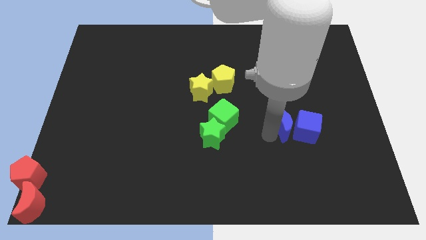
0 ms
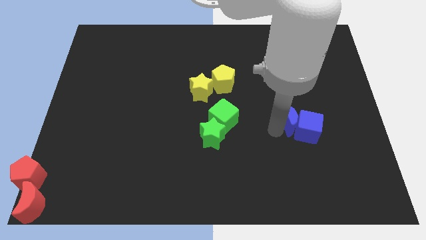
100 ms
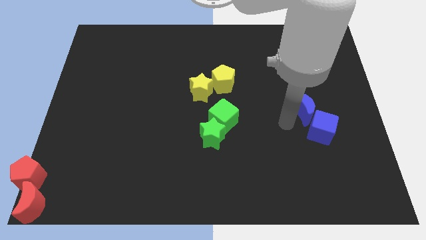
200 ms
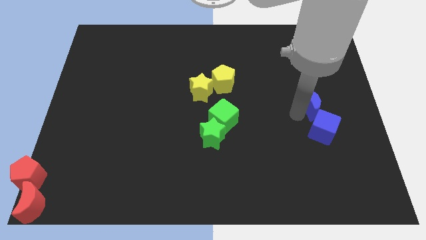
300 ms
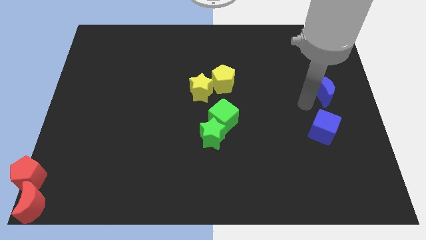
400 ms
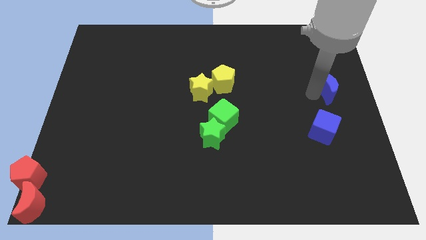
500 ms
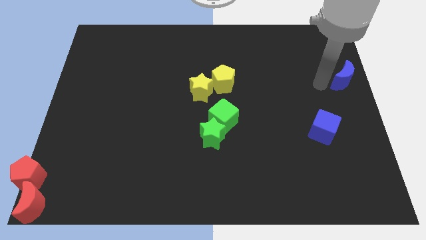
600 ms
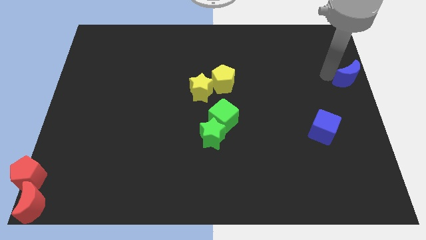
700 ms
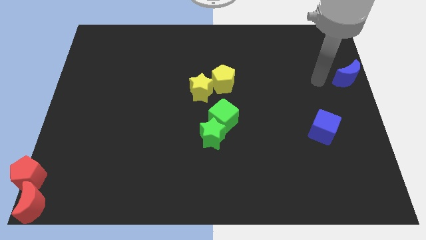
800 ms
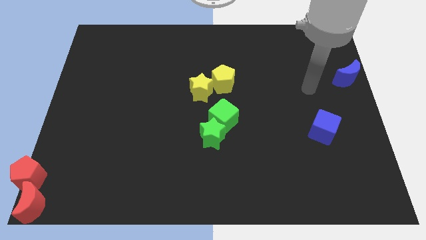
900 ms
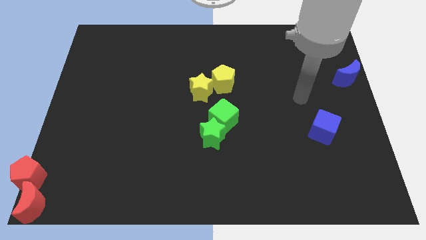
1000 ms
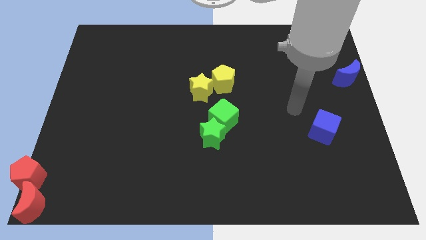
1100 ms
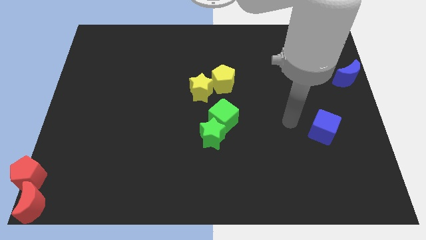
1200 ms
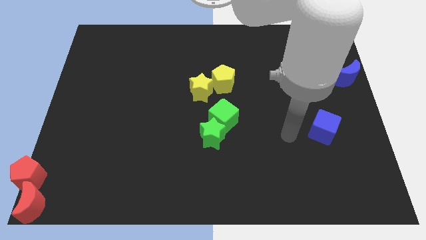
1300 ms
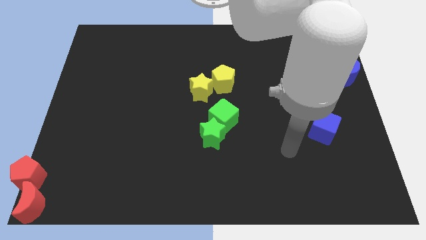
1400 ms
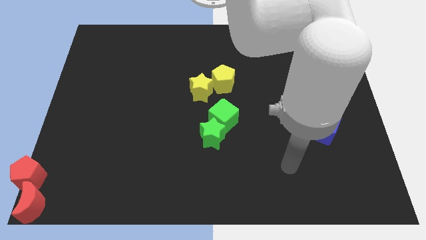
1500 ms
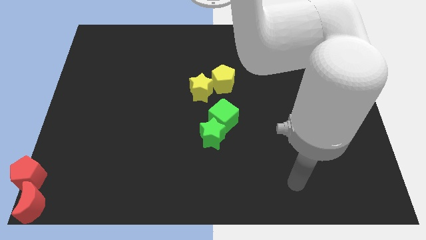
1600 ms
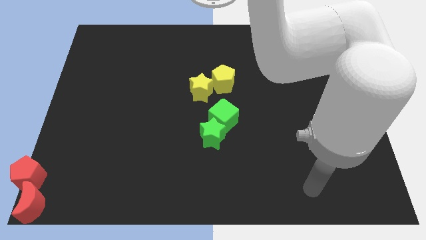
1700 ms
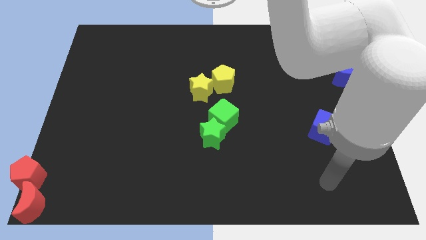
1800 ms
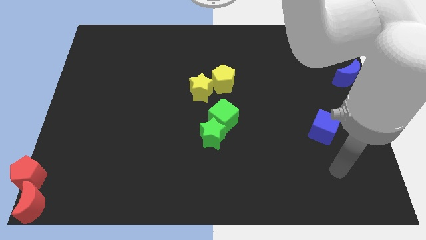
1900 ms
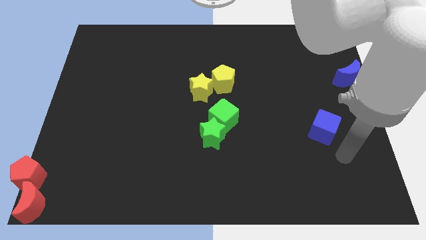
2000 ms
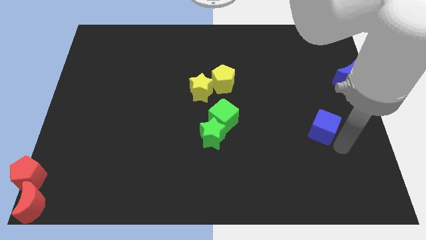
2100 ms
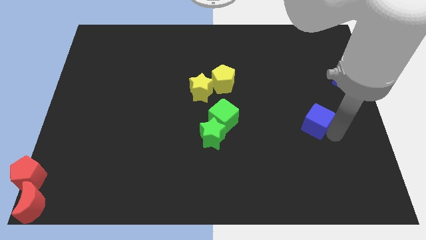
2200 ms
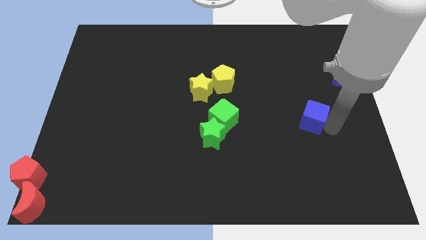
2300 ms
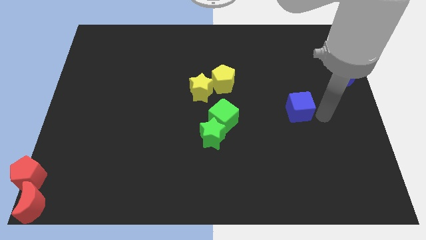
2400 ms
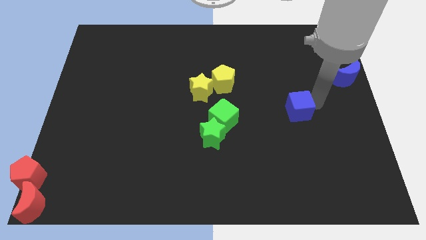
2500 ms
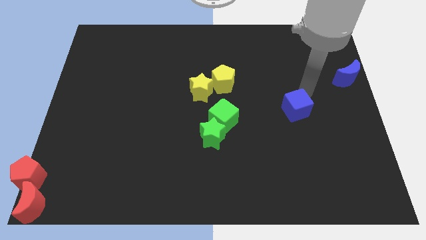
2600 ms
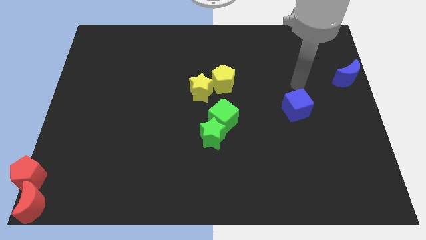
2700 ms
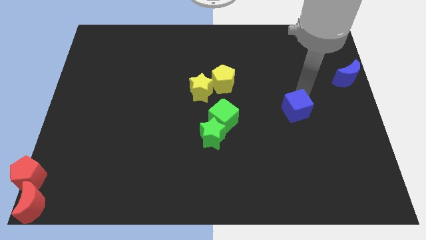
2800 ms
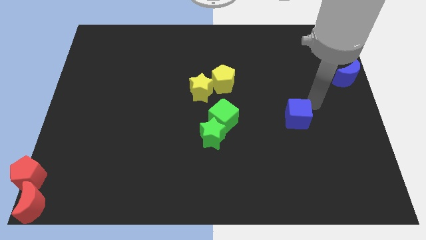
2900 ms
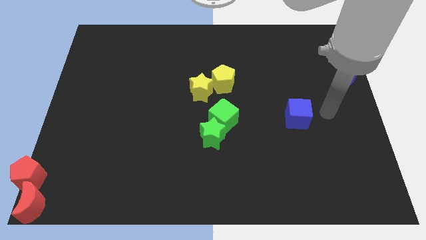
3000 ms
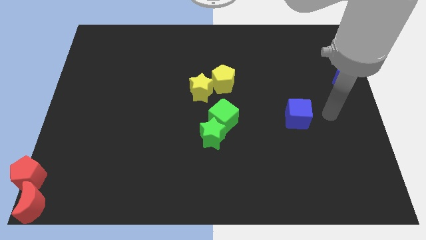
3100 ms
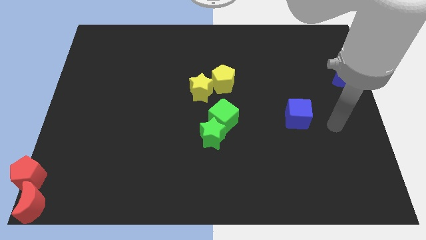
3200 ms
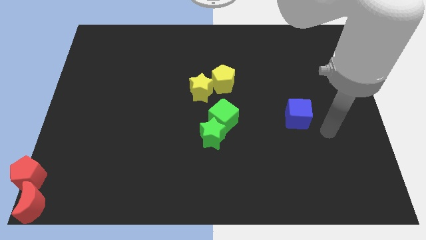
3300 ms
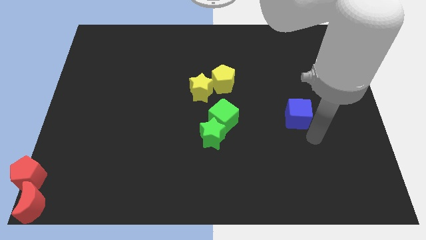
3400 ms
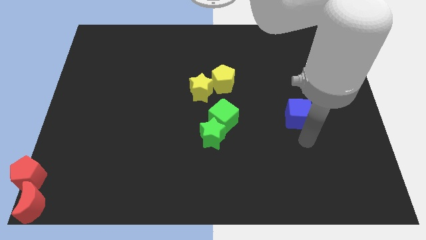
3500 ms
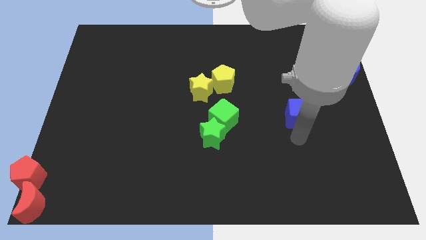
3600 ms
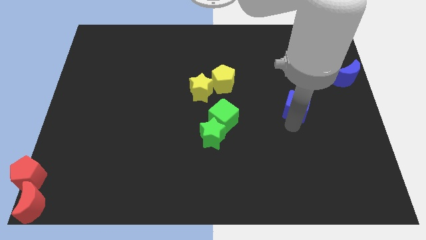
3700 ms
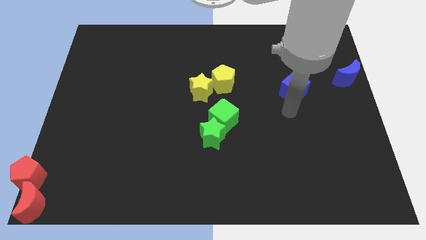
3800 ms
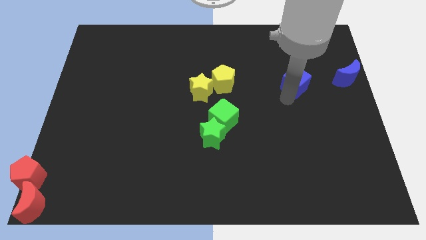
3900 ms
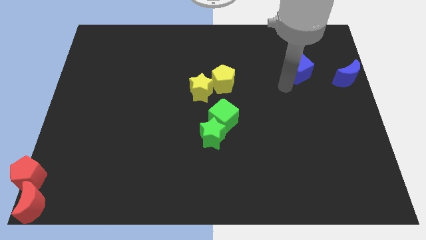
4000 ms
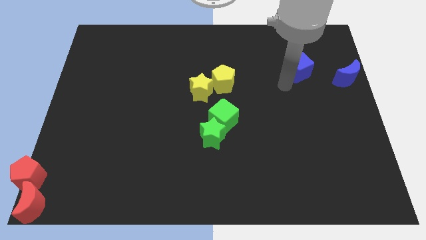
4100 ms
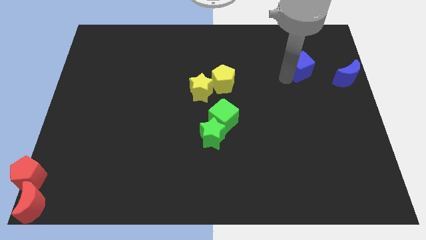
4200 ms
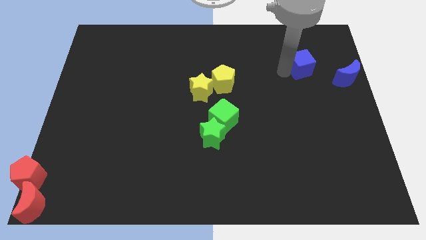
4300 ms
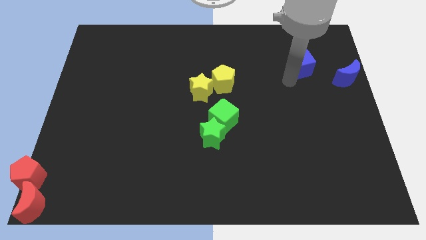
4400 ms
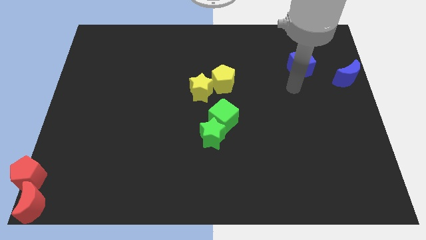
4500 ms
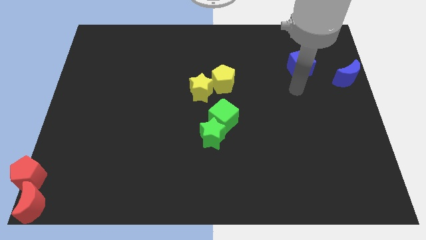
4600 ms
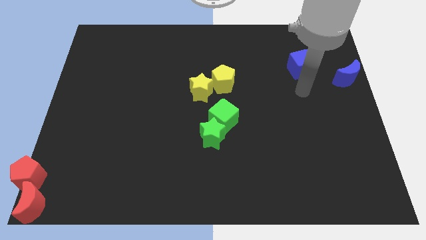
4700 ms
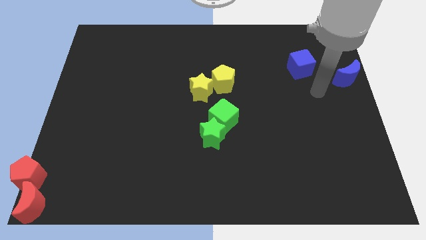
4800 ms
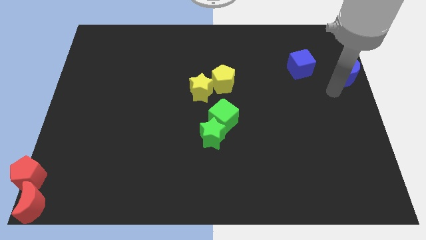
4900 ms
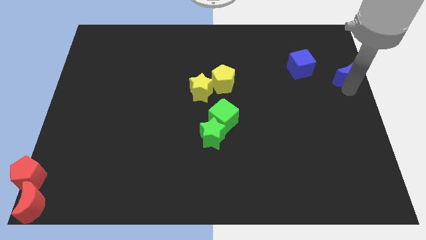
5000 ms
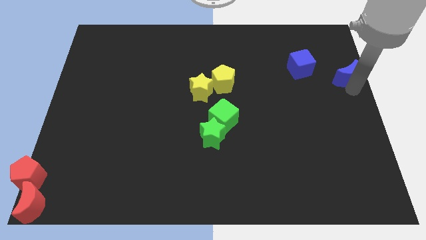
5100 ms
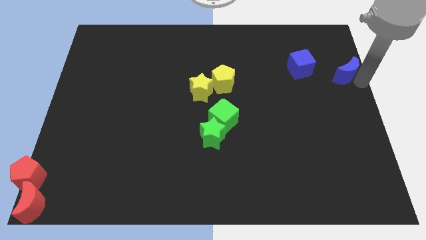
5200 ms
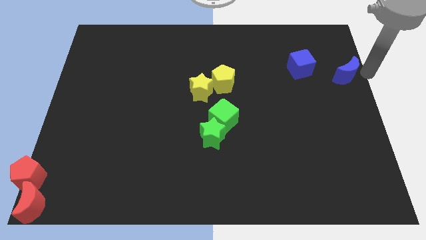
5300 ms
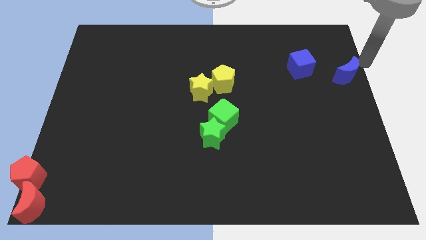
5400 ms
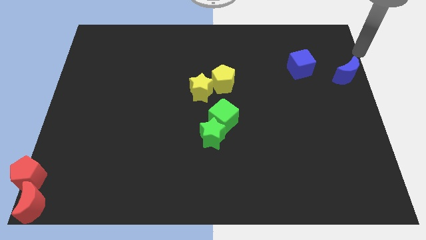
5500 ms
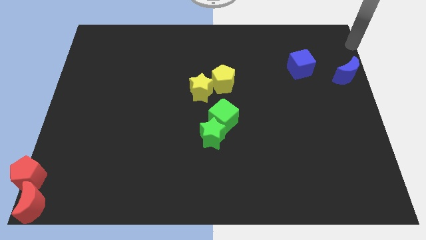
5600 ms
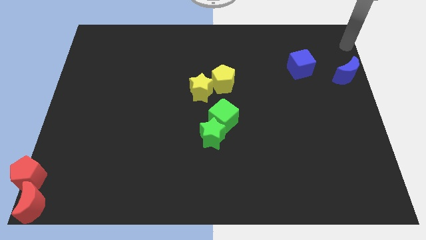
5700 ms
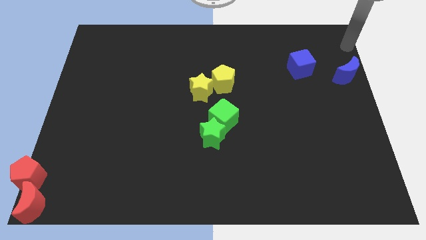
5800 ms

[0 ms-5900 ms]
move the blue blocks to the top right of the board

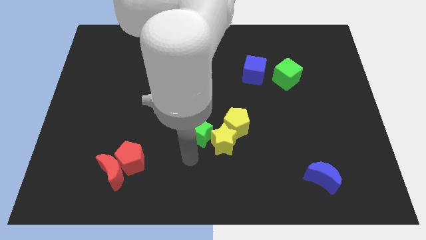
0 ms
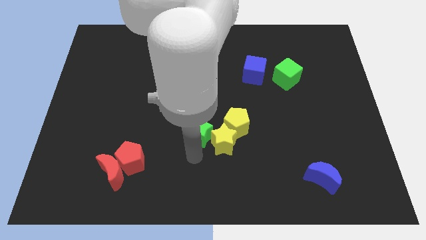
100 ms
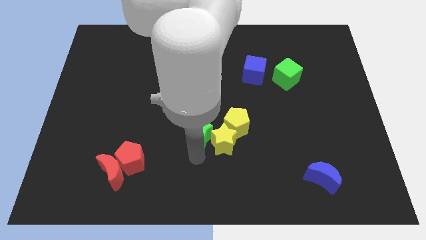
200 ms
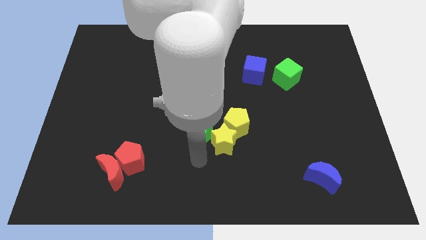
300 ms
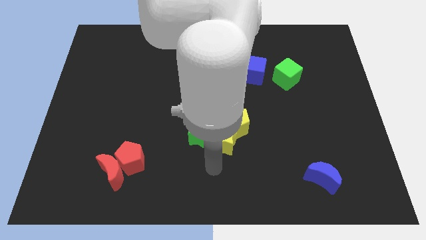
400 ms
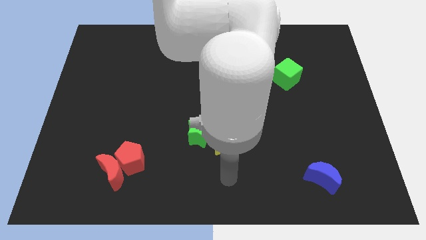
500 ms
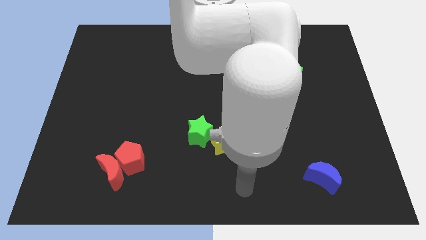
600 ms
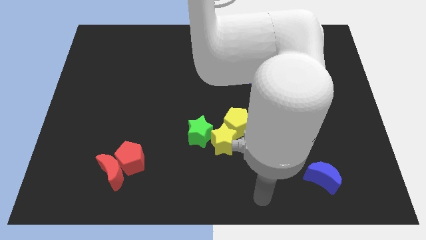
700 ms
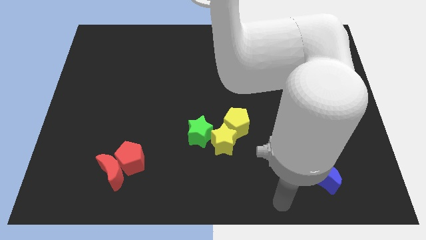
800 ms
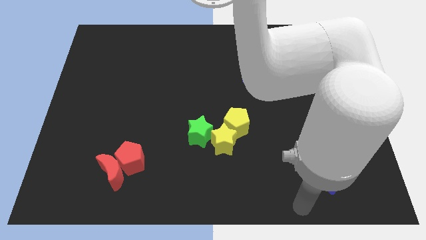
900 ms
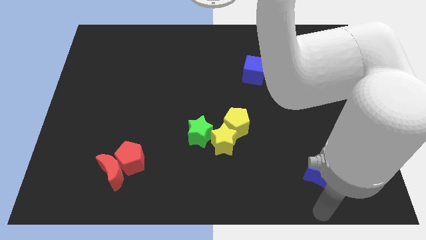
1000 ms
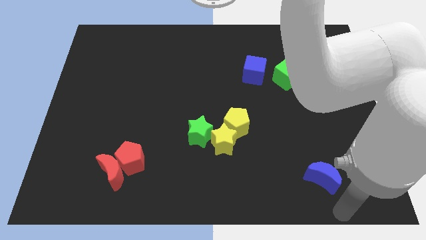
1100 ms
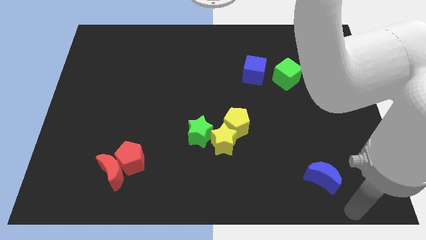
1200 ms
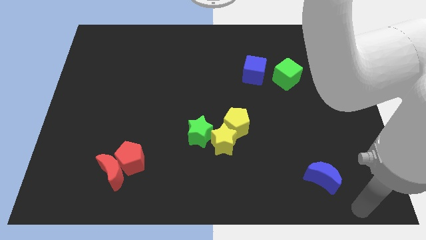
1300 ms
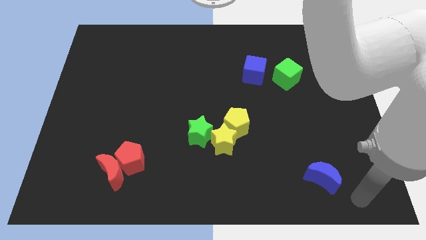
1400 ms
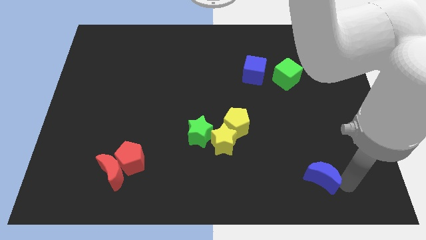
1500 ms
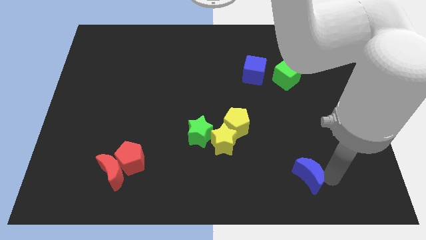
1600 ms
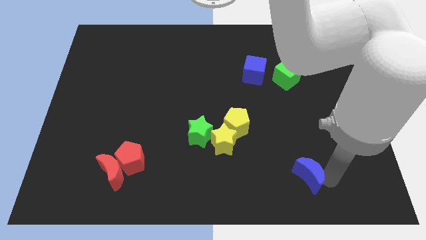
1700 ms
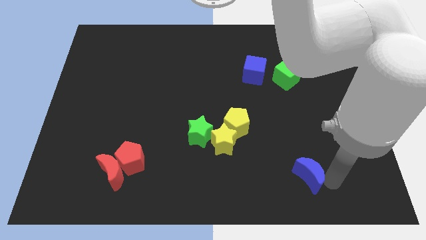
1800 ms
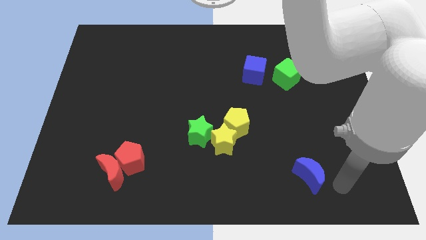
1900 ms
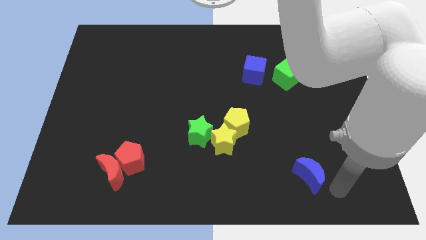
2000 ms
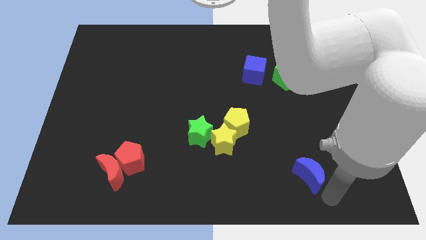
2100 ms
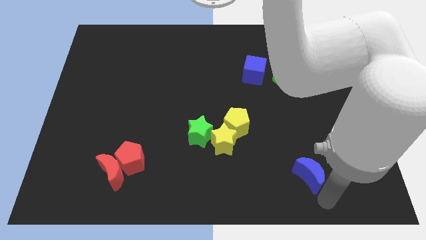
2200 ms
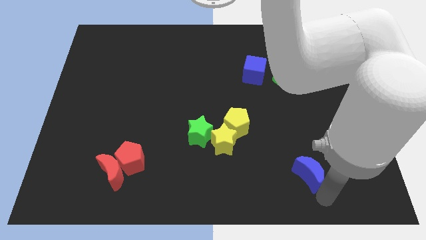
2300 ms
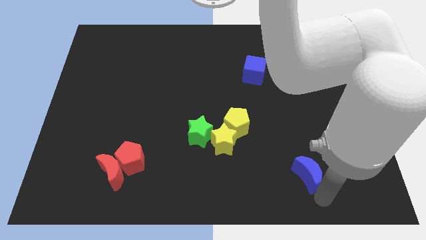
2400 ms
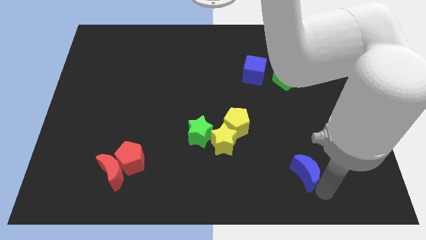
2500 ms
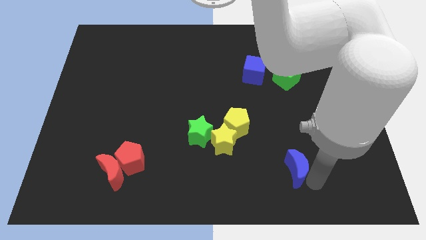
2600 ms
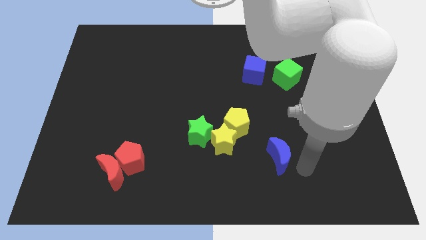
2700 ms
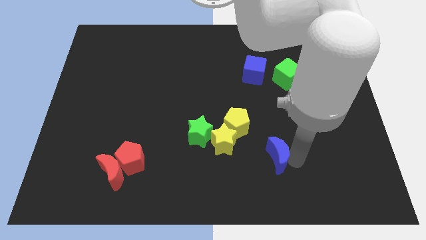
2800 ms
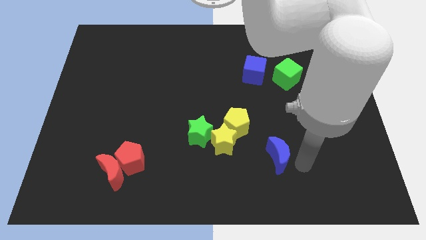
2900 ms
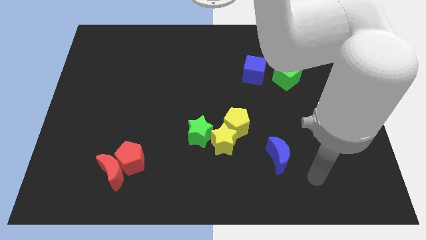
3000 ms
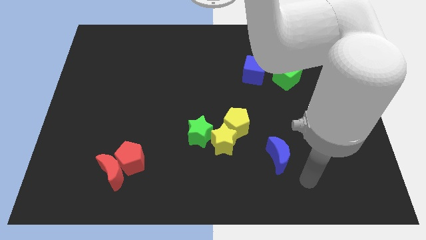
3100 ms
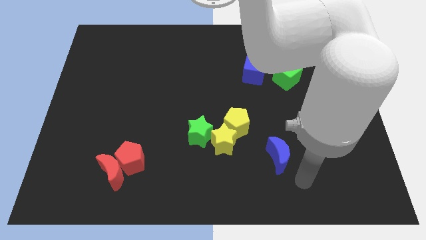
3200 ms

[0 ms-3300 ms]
move the blue moon towards the group of yellow blocks
